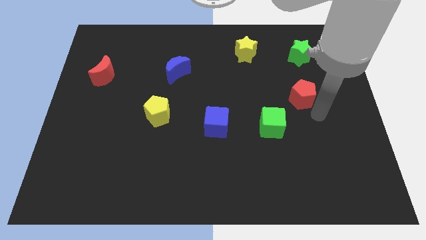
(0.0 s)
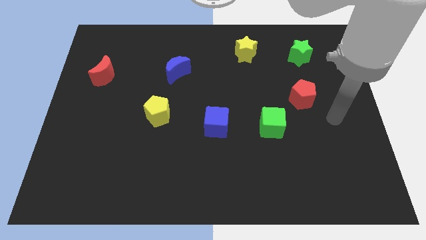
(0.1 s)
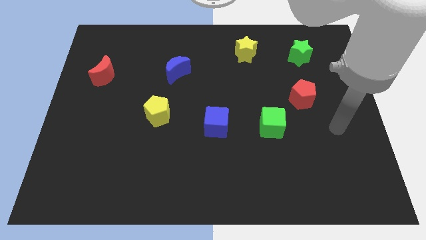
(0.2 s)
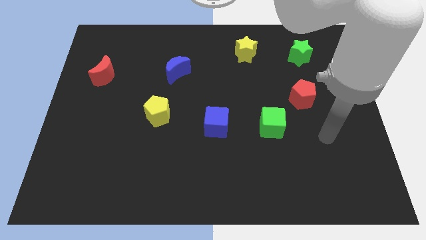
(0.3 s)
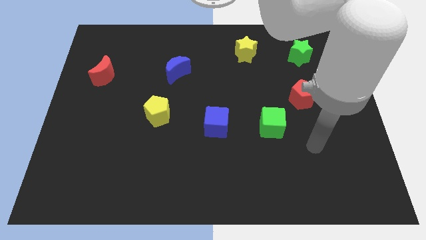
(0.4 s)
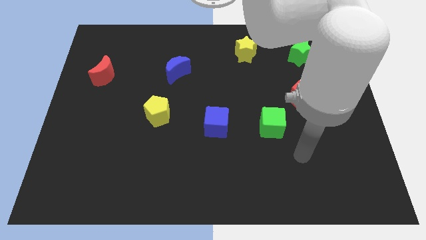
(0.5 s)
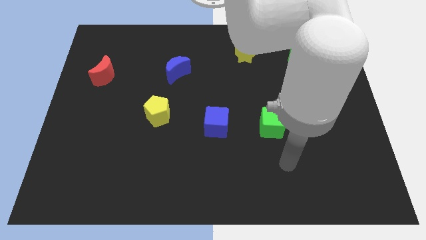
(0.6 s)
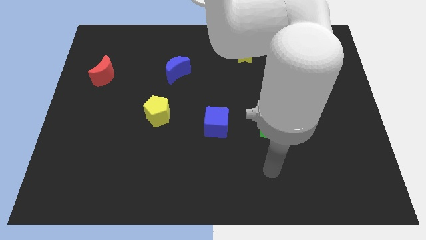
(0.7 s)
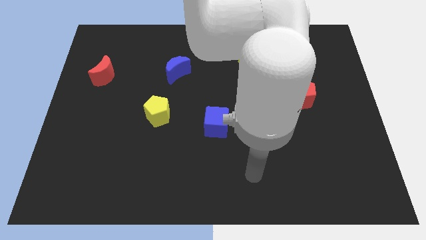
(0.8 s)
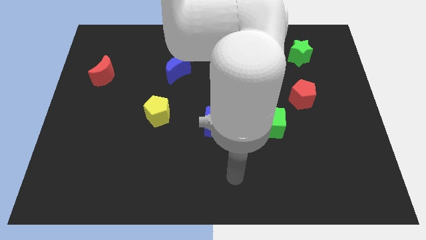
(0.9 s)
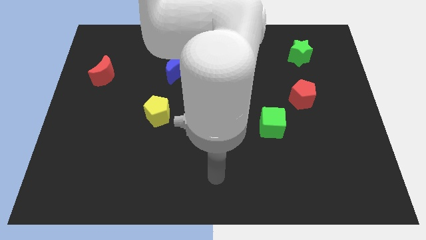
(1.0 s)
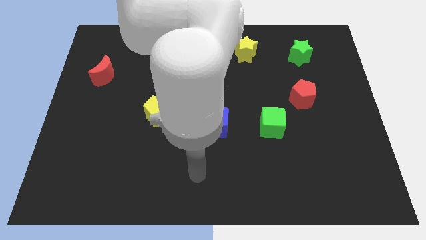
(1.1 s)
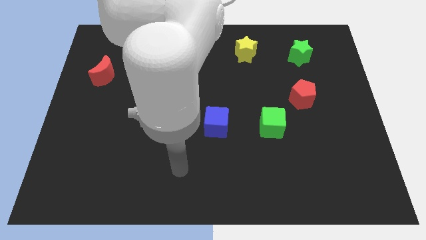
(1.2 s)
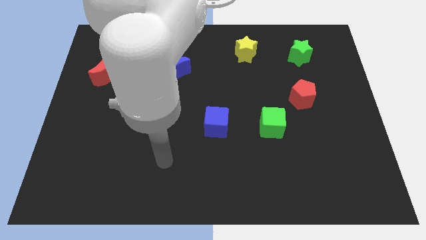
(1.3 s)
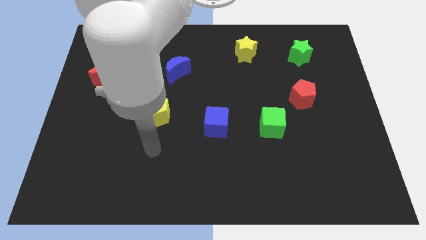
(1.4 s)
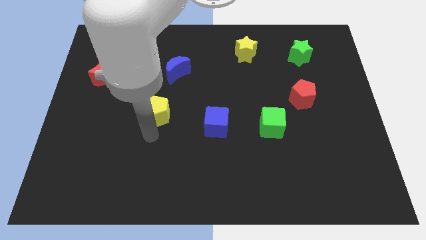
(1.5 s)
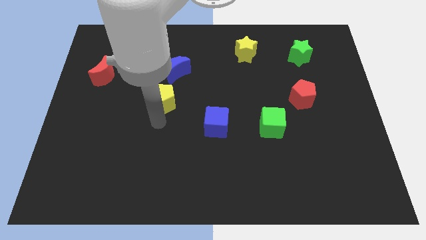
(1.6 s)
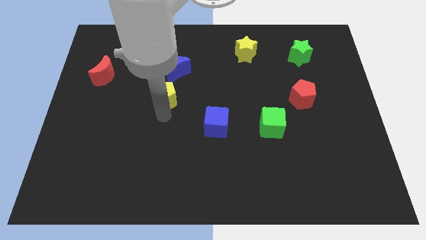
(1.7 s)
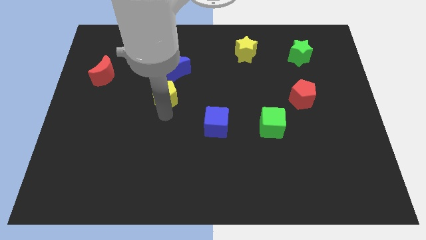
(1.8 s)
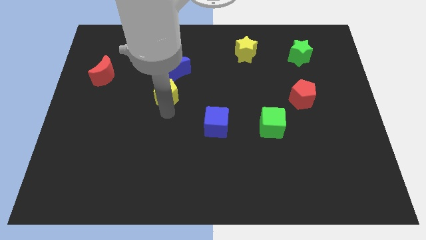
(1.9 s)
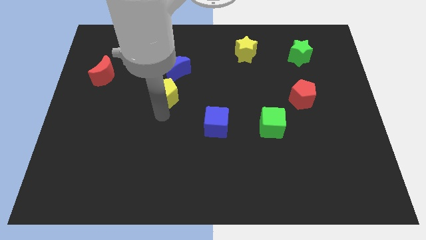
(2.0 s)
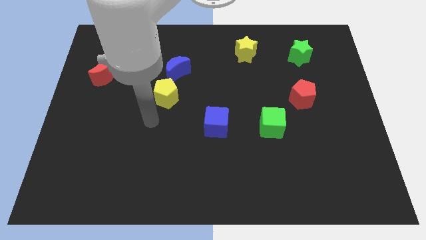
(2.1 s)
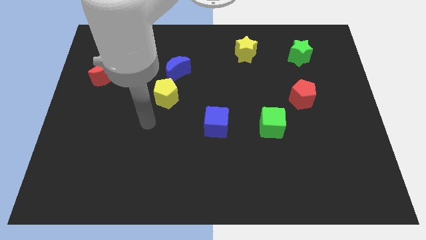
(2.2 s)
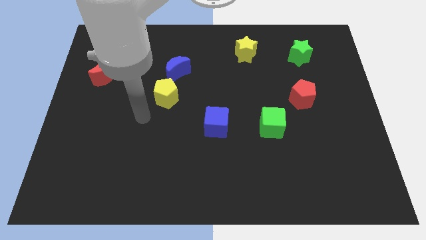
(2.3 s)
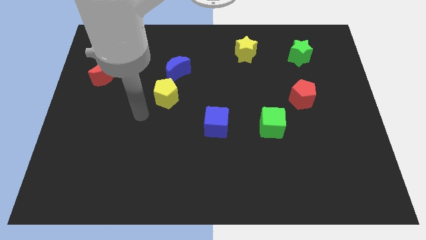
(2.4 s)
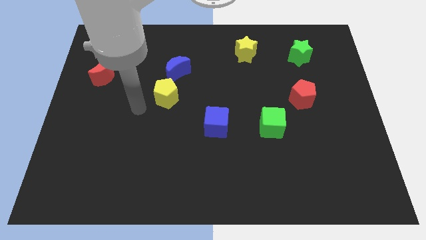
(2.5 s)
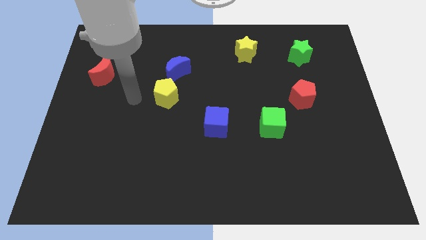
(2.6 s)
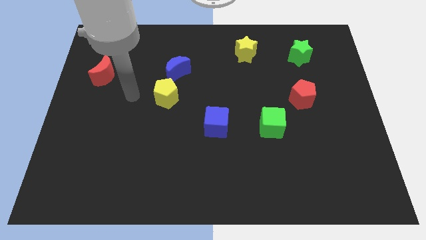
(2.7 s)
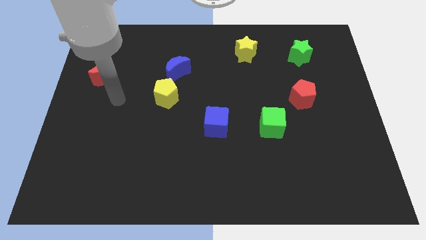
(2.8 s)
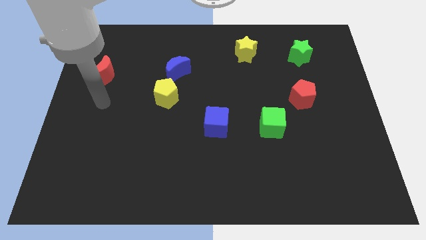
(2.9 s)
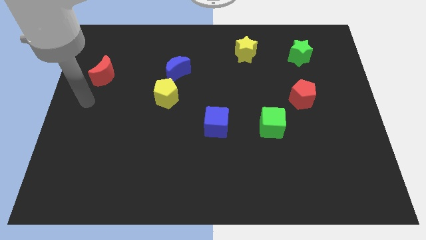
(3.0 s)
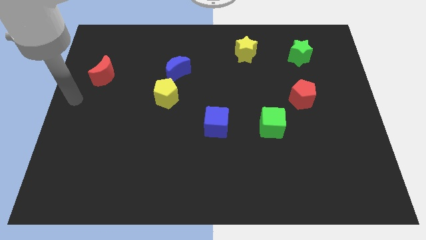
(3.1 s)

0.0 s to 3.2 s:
move the yellow pentagon below the blue moon

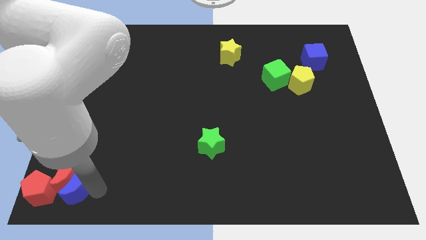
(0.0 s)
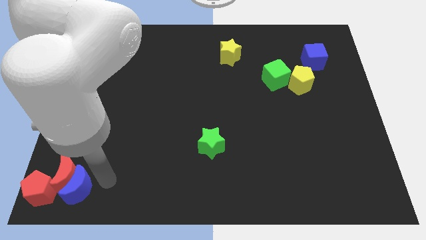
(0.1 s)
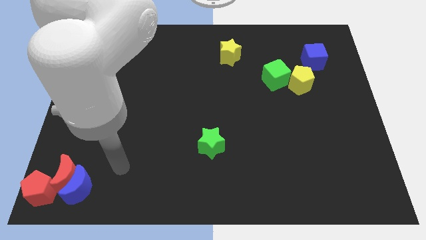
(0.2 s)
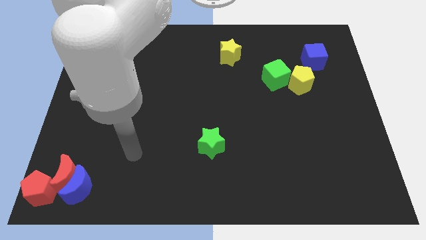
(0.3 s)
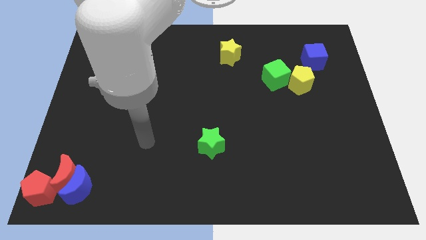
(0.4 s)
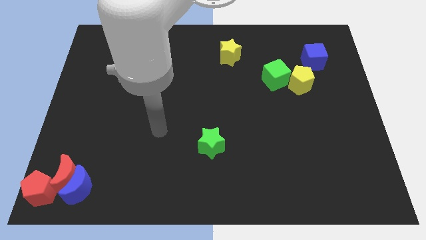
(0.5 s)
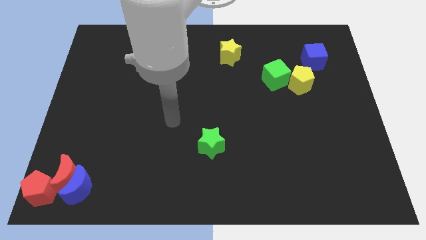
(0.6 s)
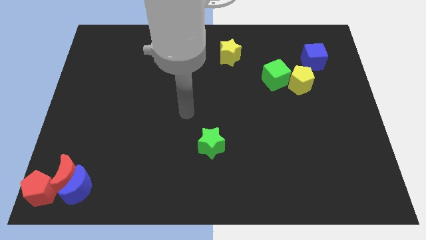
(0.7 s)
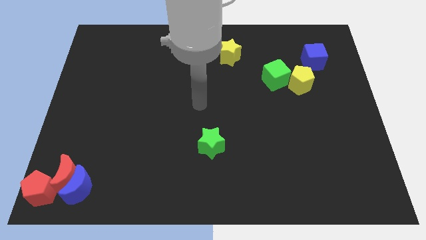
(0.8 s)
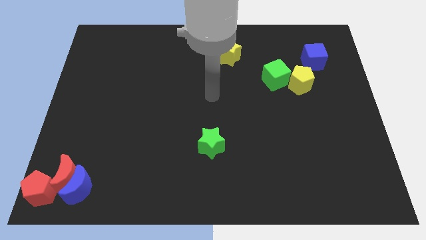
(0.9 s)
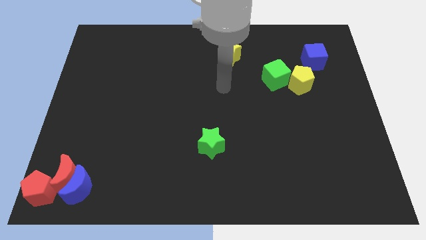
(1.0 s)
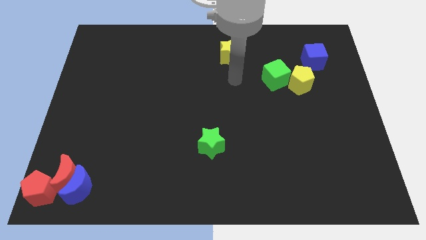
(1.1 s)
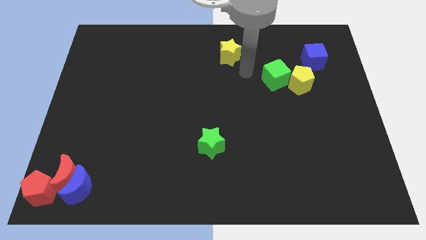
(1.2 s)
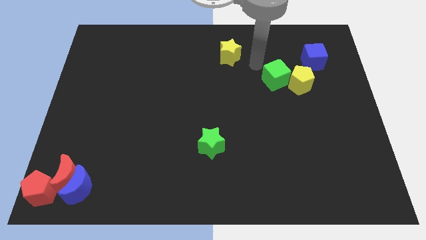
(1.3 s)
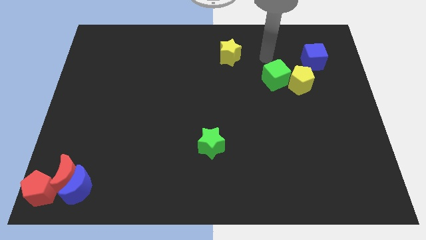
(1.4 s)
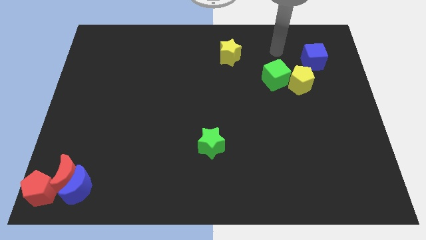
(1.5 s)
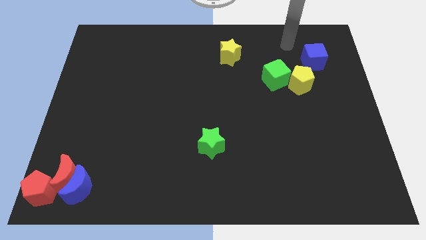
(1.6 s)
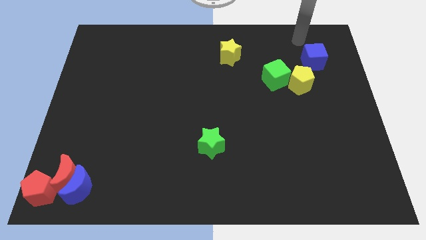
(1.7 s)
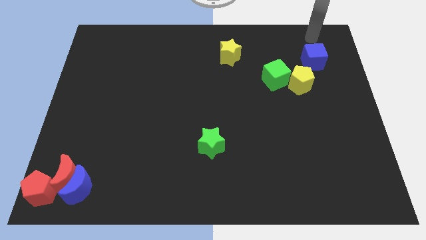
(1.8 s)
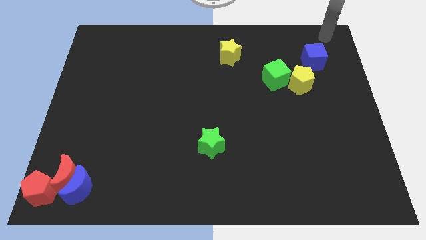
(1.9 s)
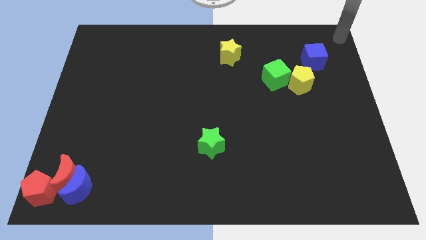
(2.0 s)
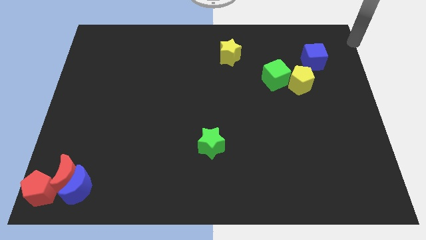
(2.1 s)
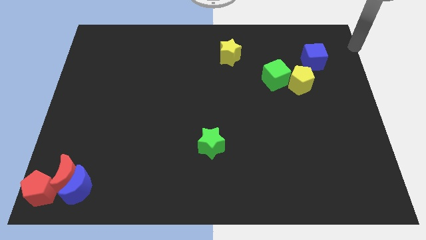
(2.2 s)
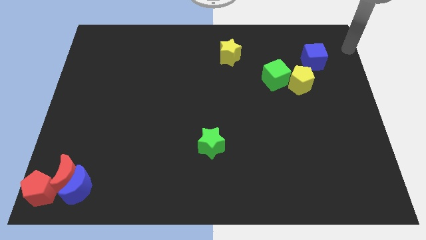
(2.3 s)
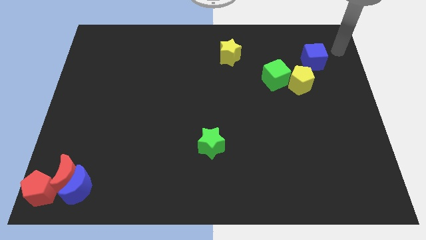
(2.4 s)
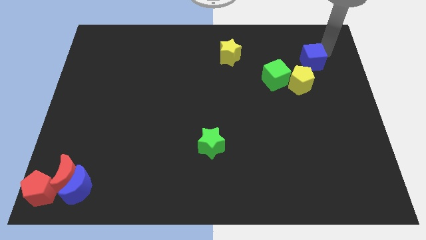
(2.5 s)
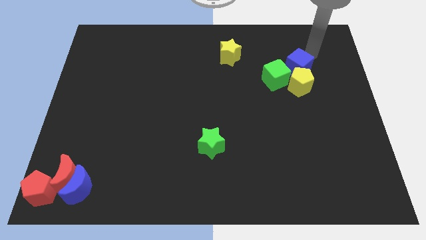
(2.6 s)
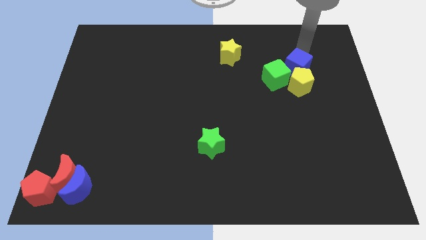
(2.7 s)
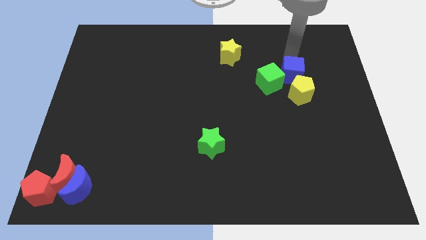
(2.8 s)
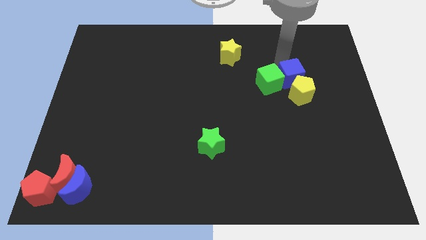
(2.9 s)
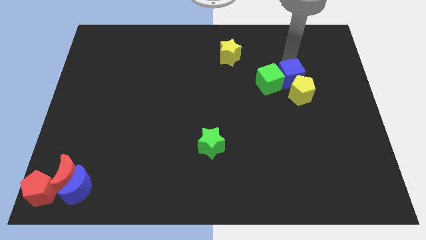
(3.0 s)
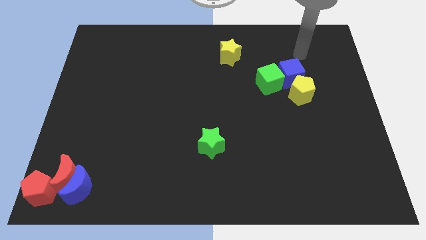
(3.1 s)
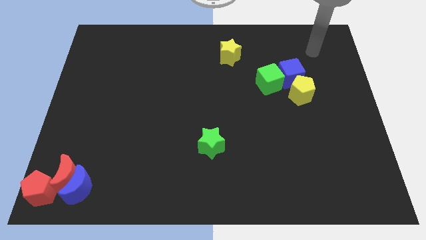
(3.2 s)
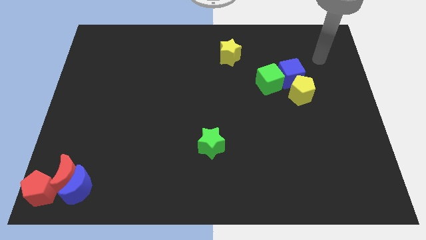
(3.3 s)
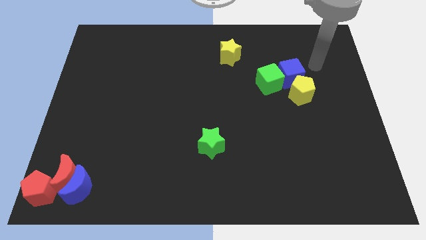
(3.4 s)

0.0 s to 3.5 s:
move the blue cube to the top right side of the green cube

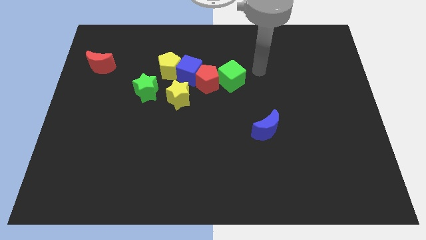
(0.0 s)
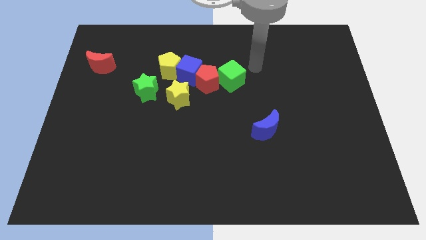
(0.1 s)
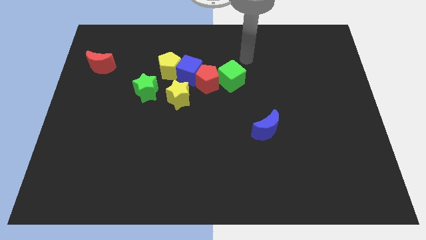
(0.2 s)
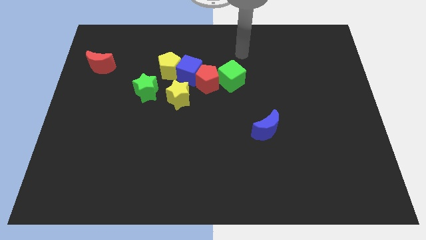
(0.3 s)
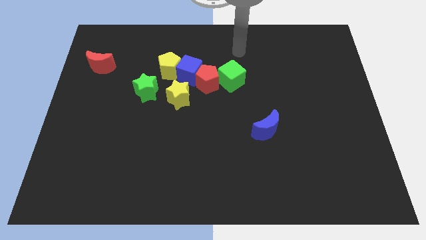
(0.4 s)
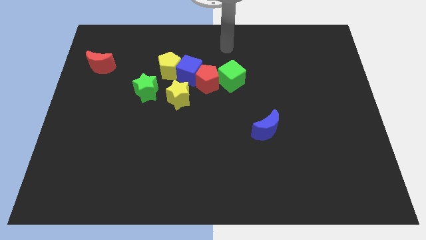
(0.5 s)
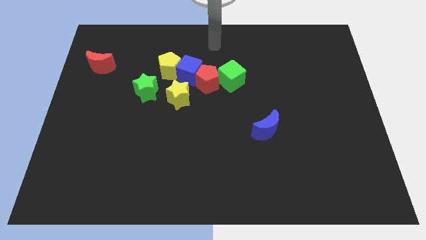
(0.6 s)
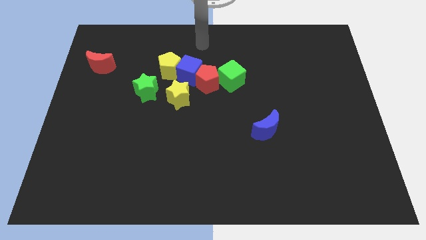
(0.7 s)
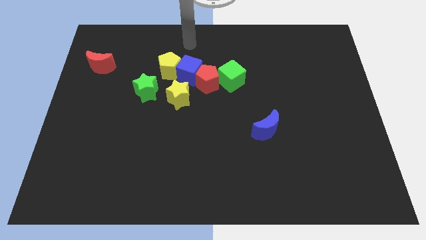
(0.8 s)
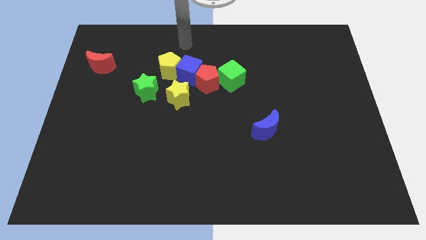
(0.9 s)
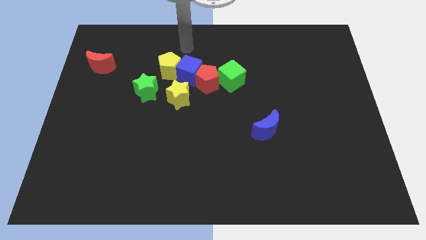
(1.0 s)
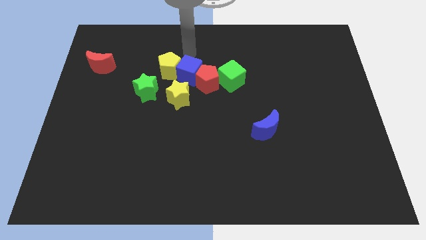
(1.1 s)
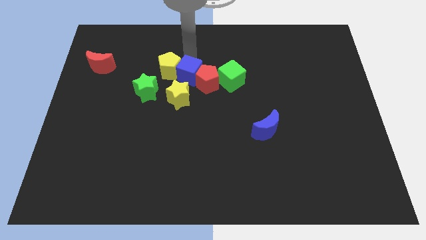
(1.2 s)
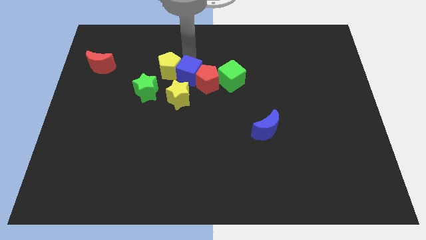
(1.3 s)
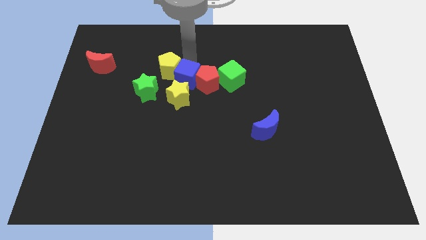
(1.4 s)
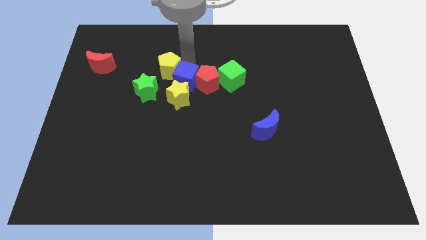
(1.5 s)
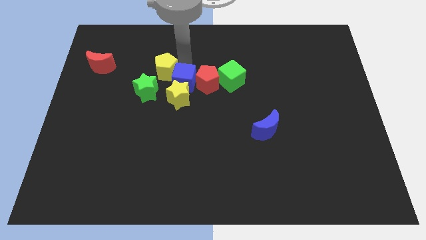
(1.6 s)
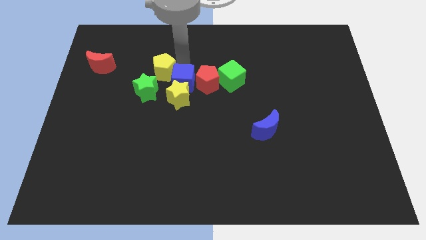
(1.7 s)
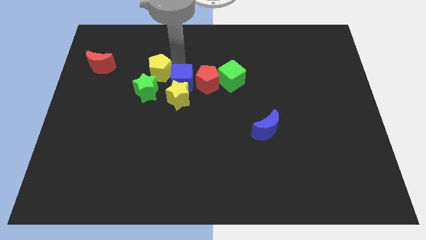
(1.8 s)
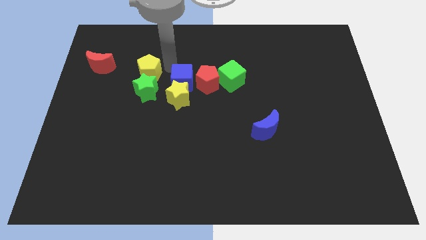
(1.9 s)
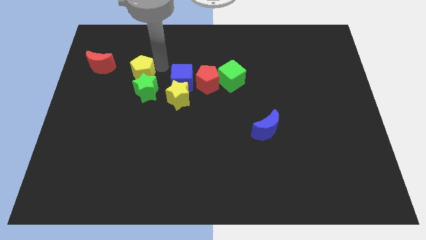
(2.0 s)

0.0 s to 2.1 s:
push the blue cube into the yellow star

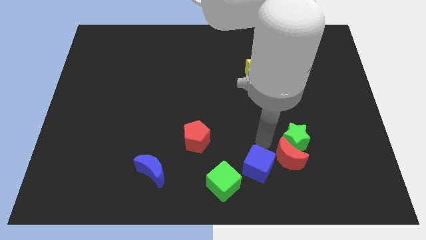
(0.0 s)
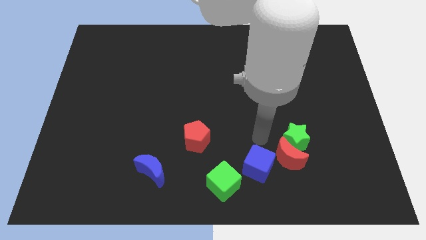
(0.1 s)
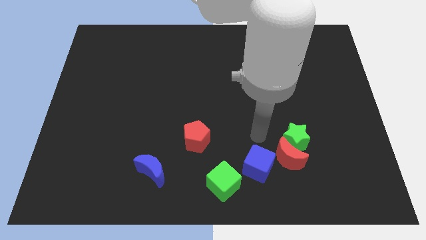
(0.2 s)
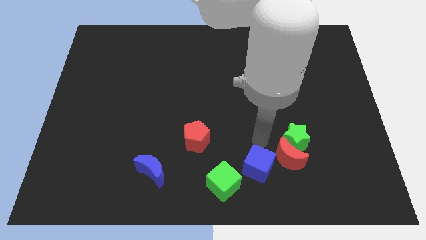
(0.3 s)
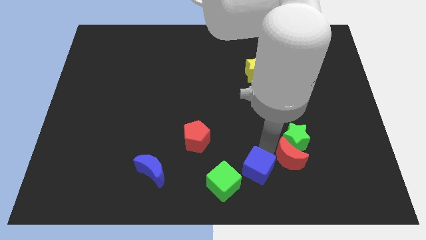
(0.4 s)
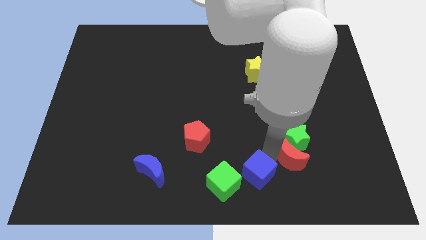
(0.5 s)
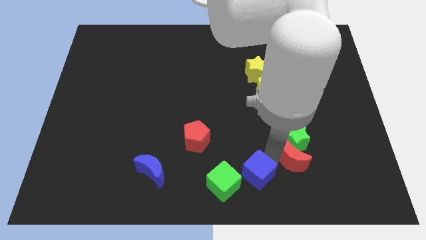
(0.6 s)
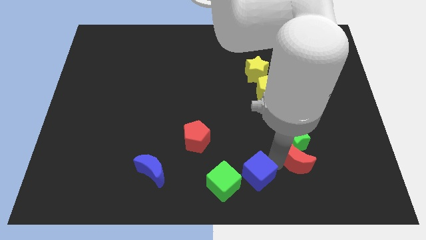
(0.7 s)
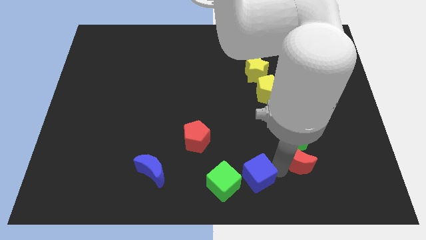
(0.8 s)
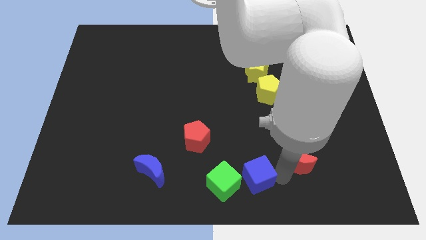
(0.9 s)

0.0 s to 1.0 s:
place your arm in between blue cube and red crecent
